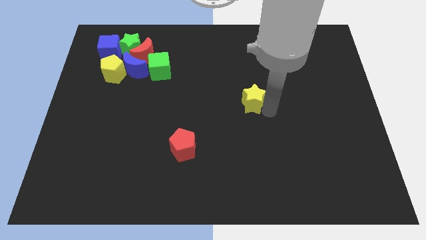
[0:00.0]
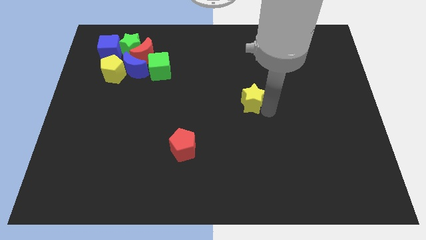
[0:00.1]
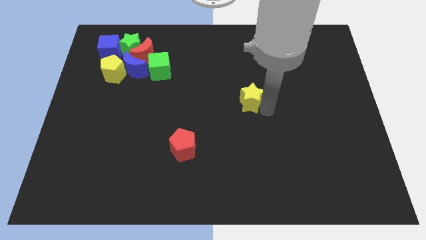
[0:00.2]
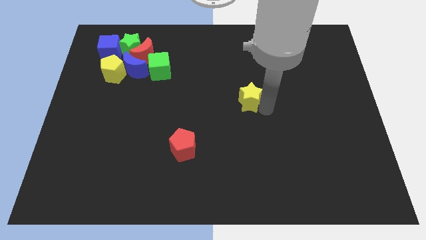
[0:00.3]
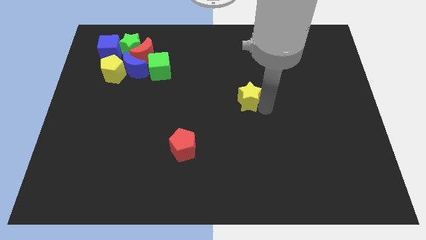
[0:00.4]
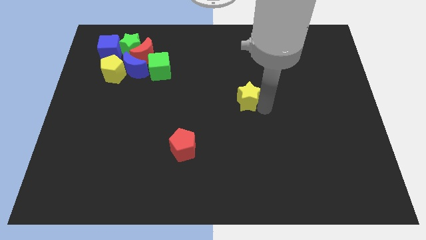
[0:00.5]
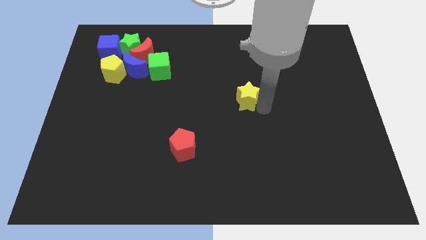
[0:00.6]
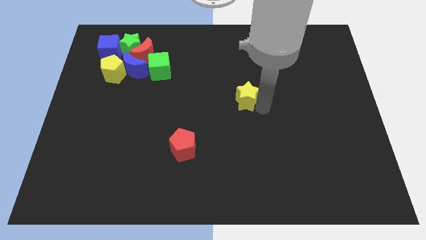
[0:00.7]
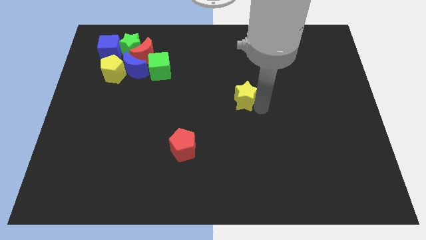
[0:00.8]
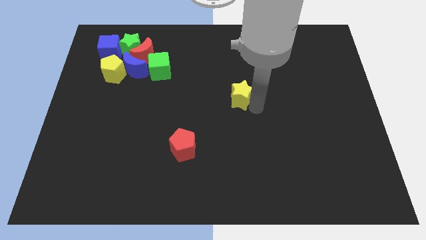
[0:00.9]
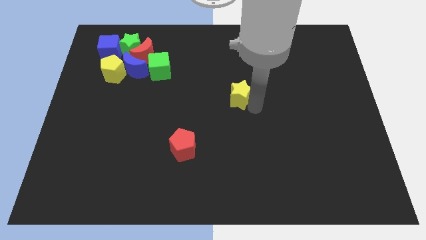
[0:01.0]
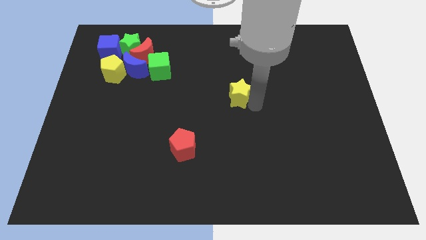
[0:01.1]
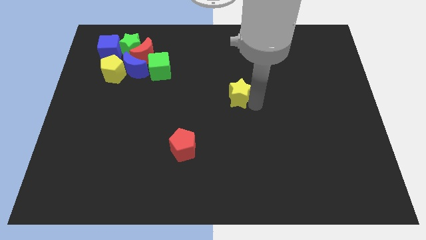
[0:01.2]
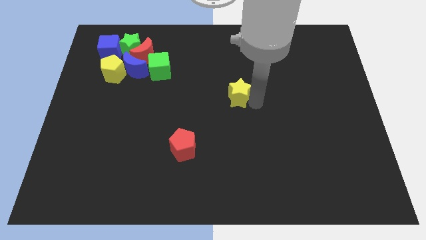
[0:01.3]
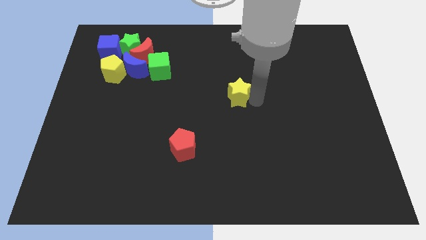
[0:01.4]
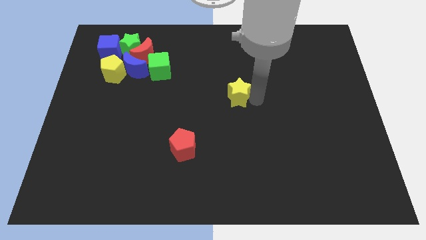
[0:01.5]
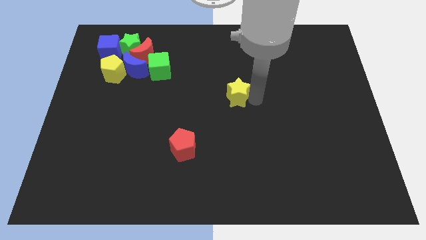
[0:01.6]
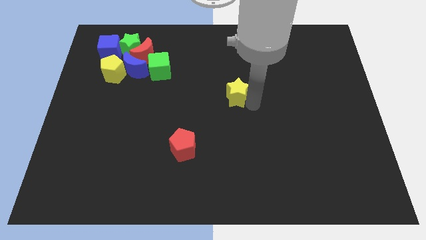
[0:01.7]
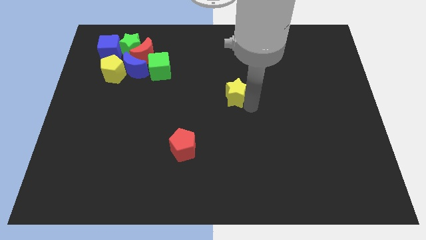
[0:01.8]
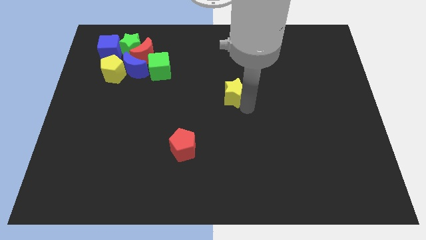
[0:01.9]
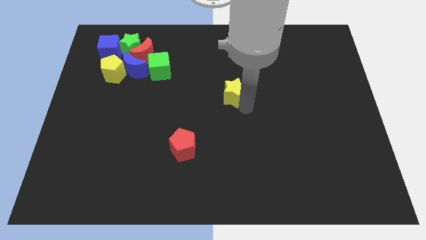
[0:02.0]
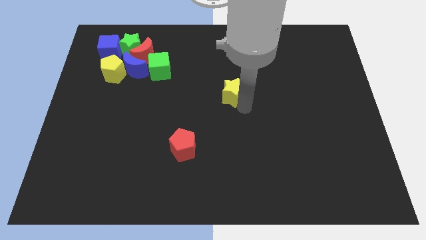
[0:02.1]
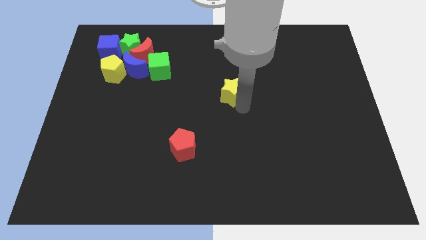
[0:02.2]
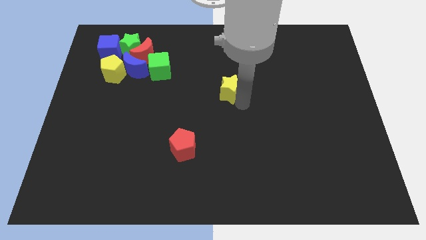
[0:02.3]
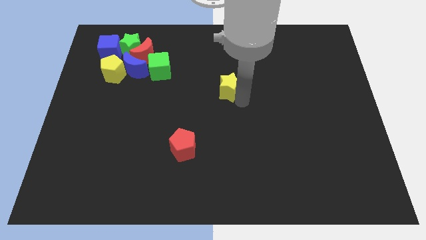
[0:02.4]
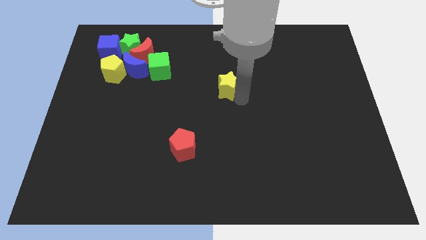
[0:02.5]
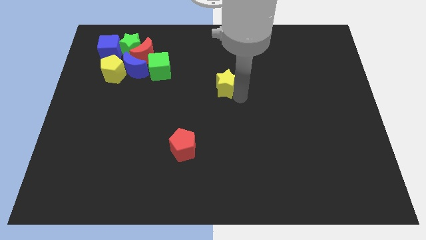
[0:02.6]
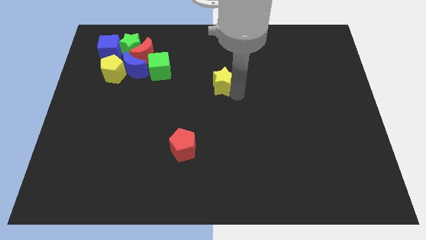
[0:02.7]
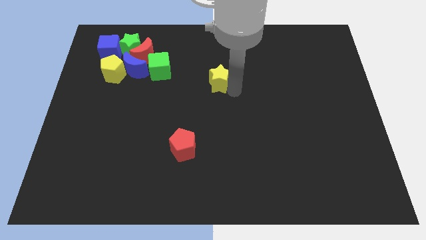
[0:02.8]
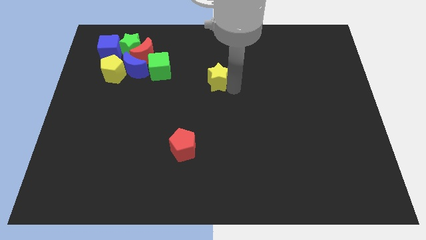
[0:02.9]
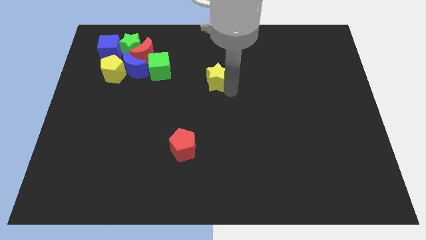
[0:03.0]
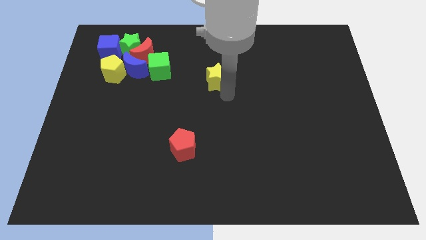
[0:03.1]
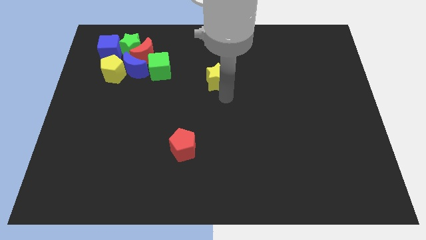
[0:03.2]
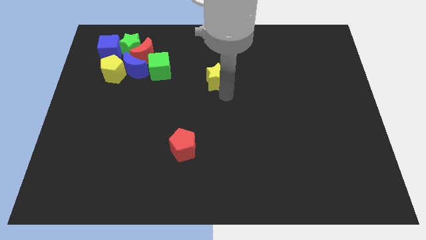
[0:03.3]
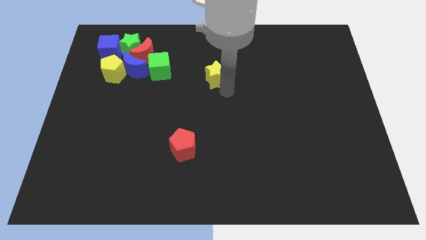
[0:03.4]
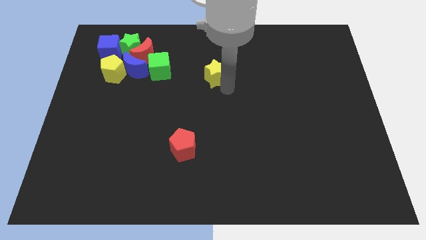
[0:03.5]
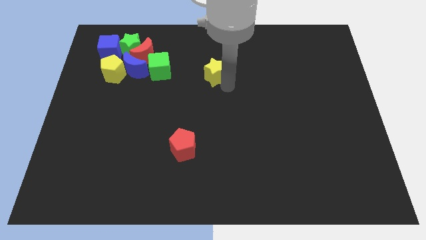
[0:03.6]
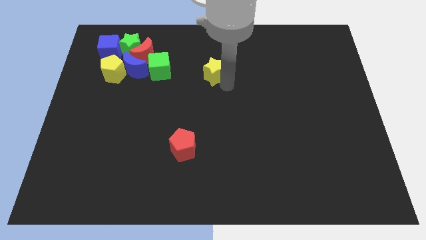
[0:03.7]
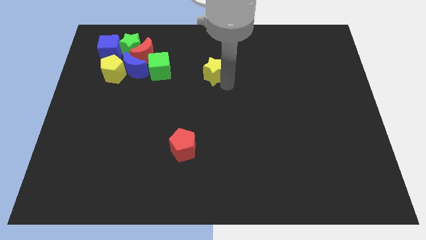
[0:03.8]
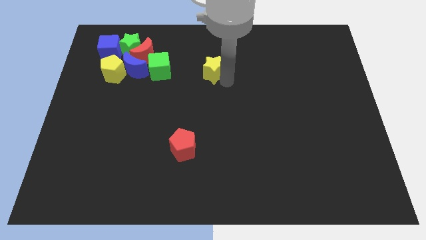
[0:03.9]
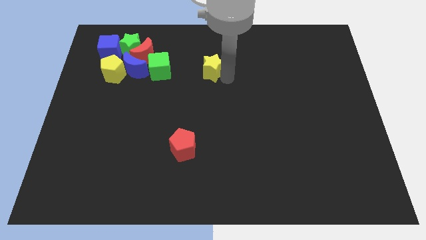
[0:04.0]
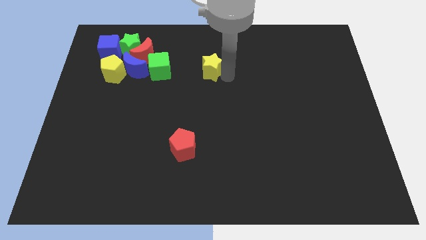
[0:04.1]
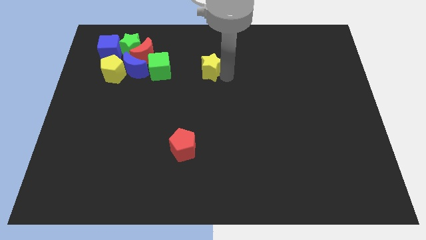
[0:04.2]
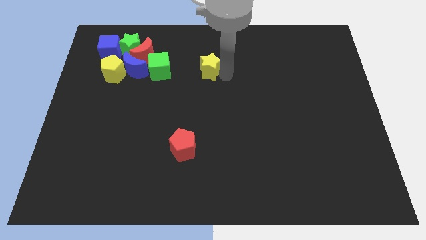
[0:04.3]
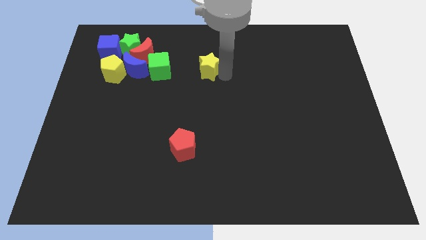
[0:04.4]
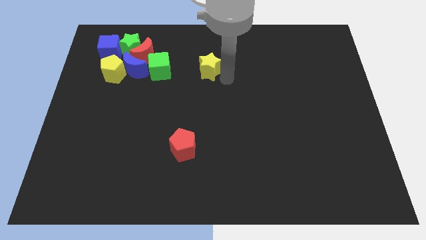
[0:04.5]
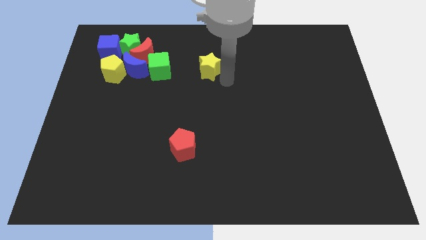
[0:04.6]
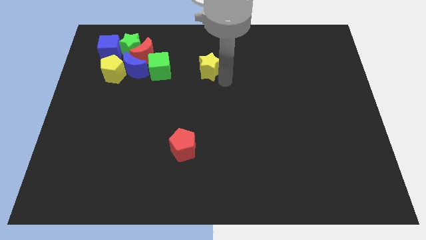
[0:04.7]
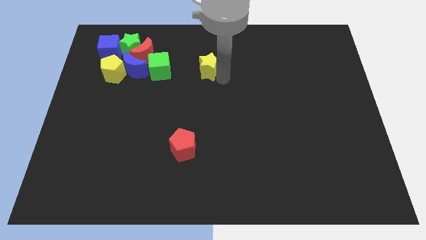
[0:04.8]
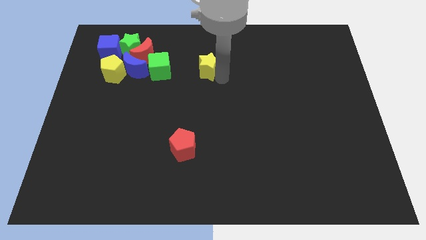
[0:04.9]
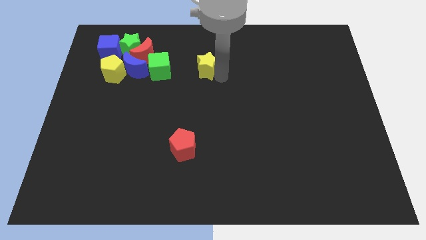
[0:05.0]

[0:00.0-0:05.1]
place the yellow star to the right of the green cube

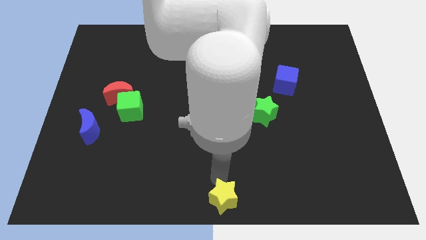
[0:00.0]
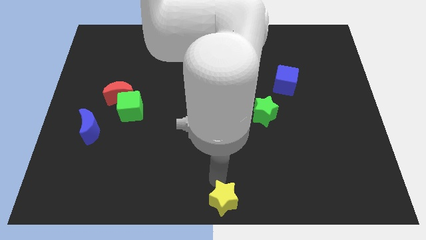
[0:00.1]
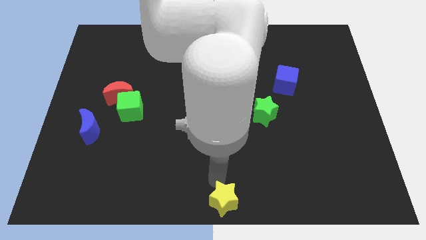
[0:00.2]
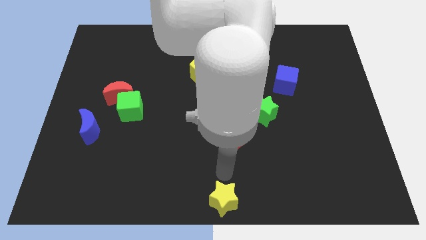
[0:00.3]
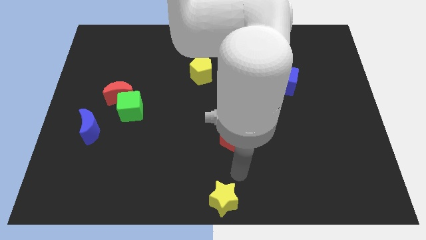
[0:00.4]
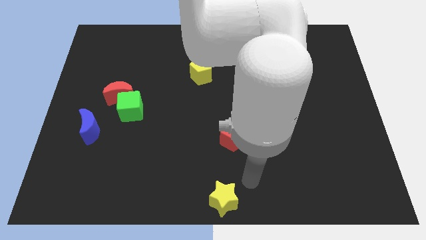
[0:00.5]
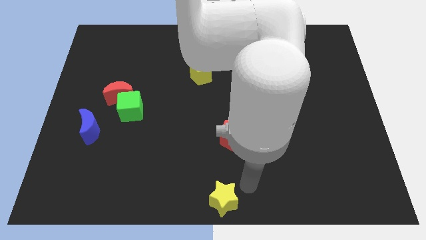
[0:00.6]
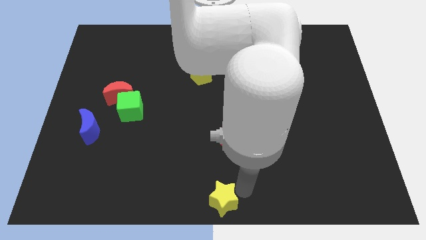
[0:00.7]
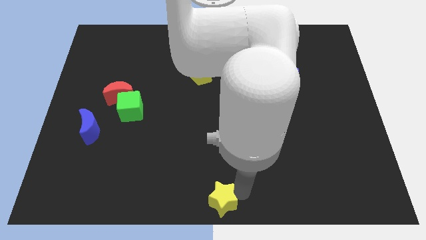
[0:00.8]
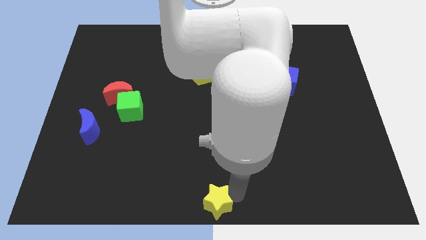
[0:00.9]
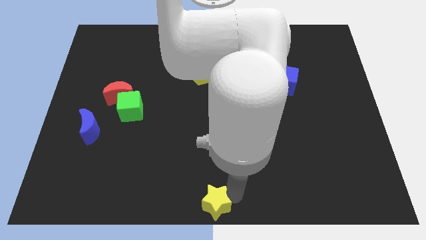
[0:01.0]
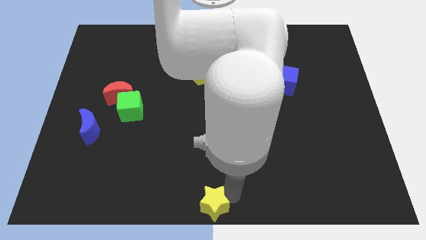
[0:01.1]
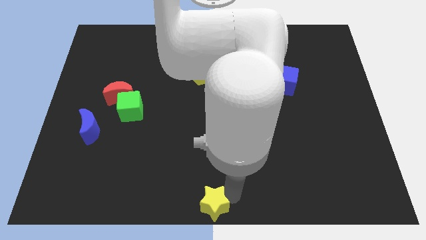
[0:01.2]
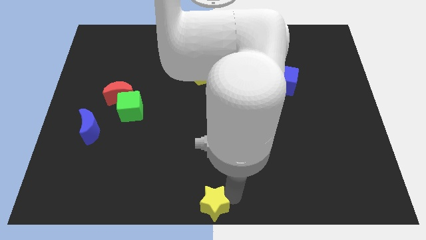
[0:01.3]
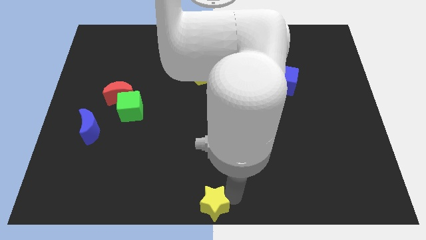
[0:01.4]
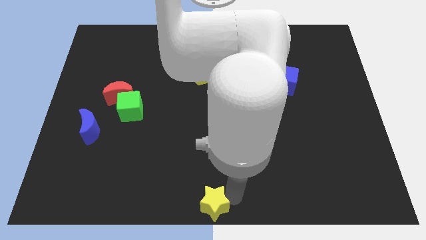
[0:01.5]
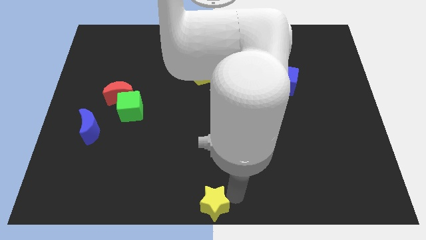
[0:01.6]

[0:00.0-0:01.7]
put the yellow star at the bottom center of the board

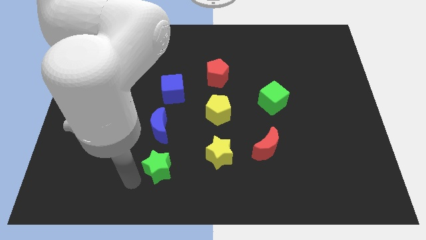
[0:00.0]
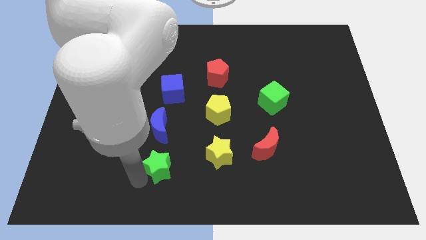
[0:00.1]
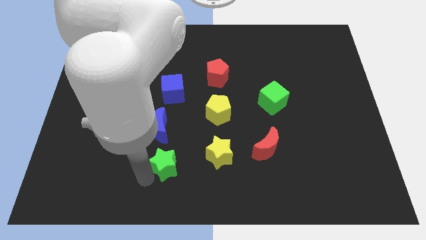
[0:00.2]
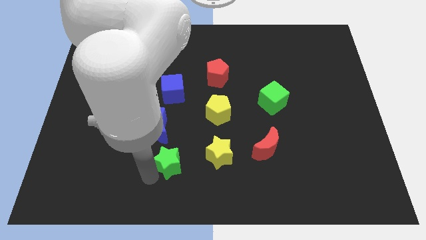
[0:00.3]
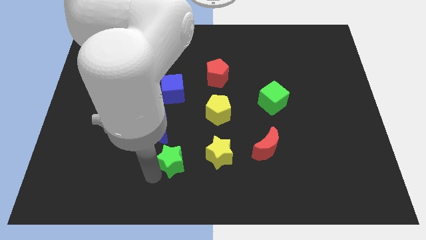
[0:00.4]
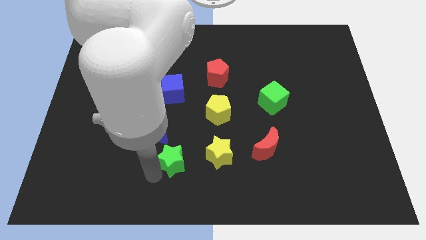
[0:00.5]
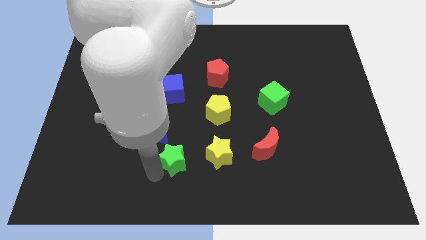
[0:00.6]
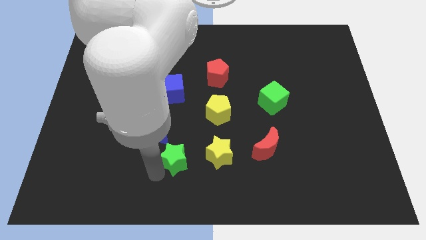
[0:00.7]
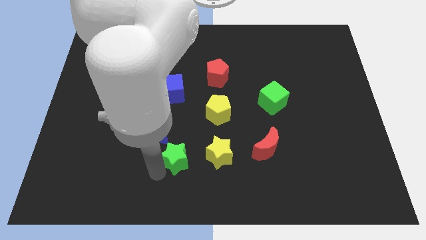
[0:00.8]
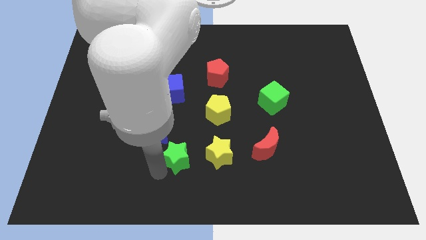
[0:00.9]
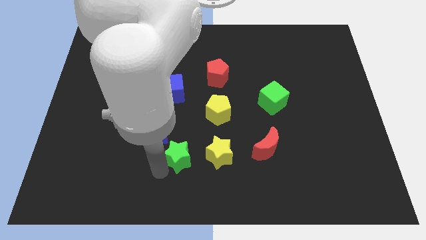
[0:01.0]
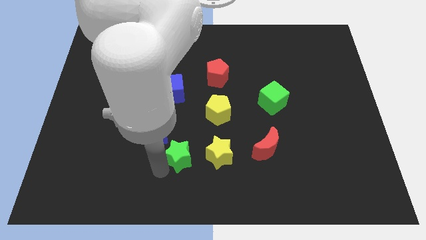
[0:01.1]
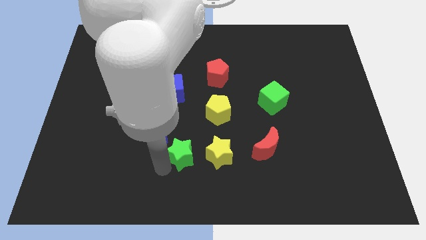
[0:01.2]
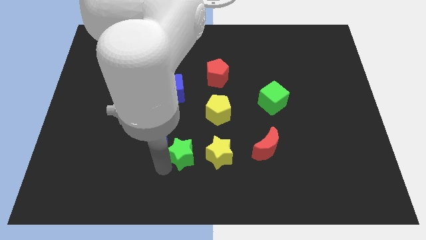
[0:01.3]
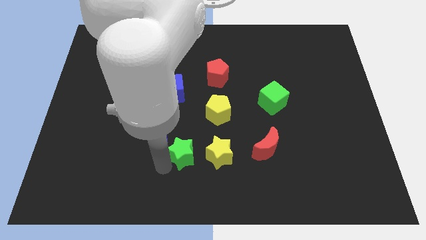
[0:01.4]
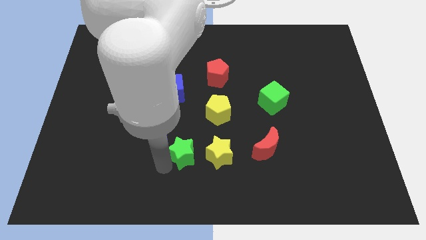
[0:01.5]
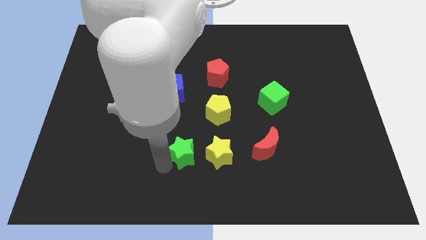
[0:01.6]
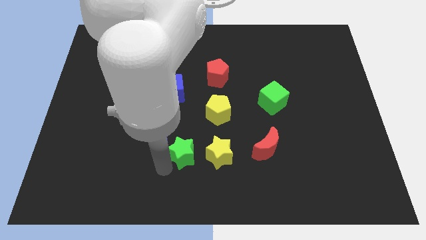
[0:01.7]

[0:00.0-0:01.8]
move the green star towards the left side of the yellow star

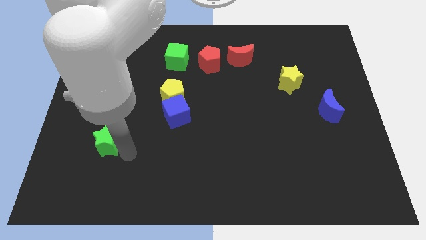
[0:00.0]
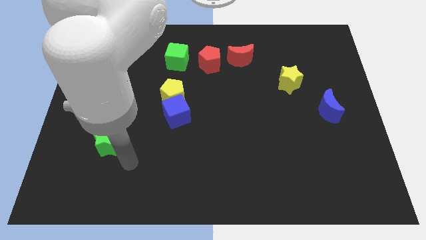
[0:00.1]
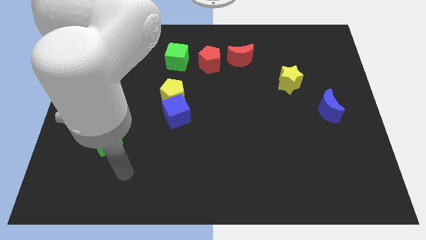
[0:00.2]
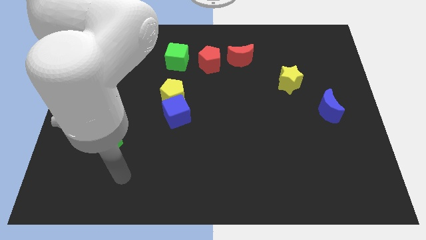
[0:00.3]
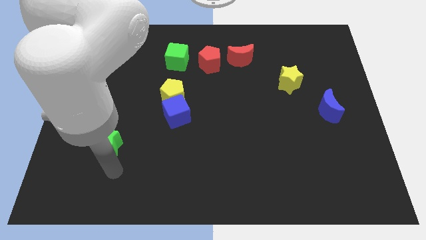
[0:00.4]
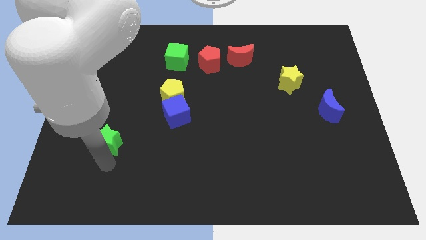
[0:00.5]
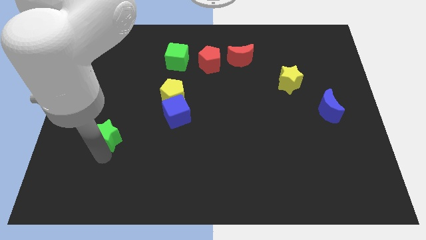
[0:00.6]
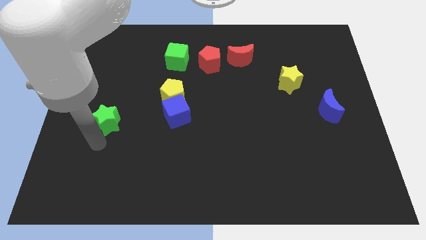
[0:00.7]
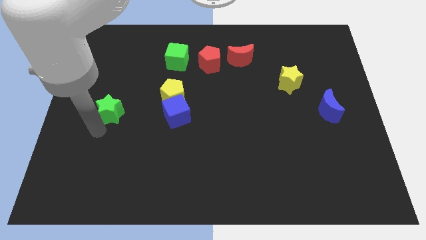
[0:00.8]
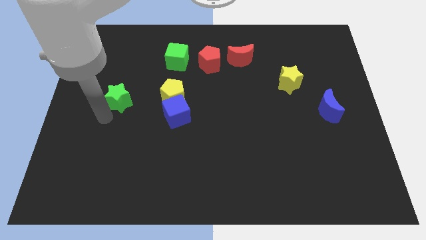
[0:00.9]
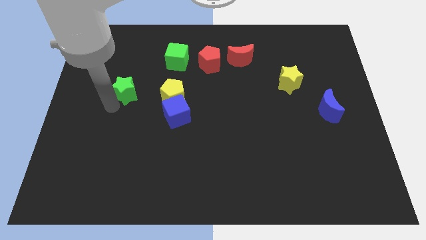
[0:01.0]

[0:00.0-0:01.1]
place green star to the left of yellow pentagon
